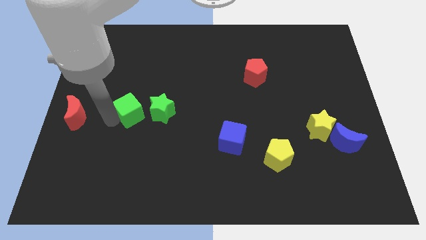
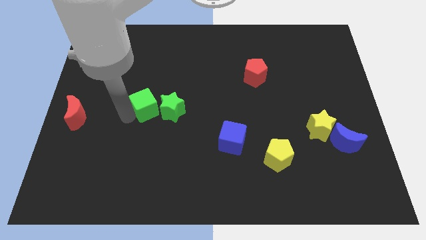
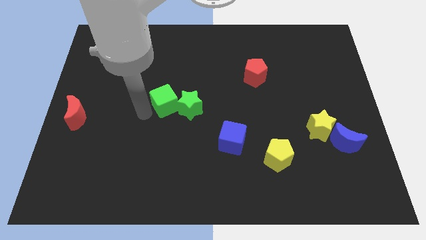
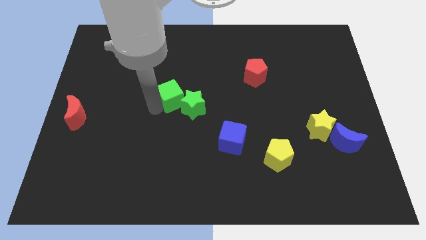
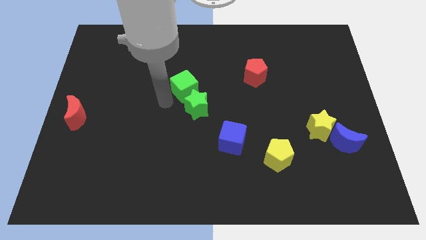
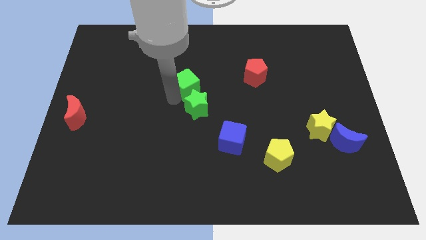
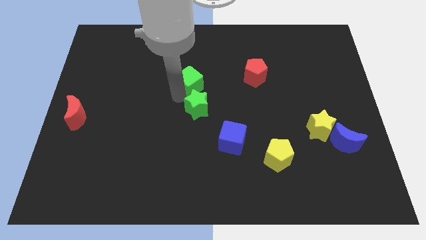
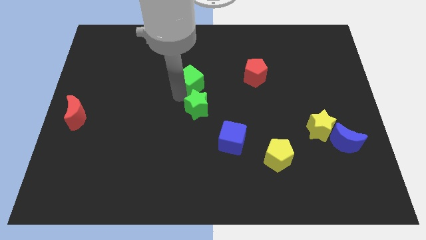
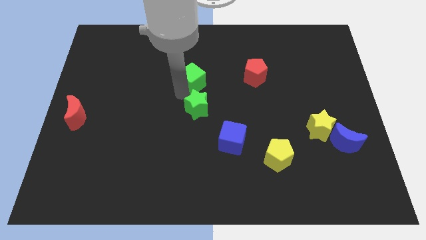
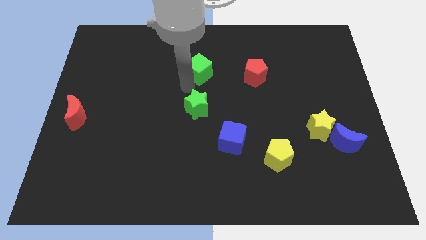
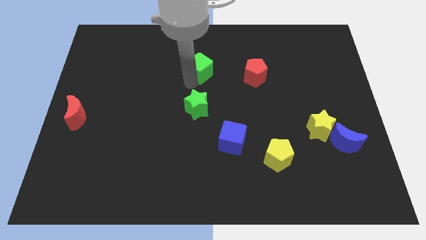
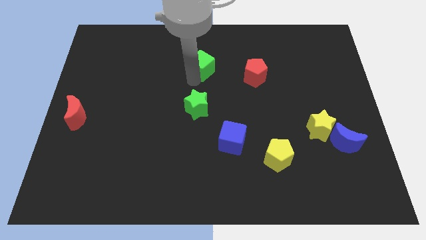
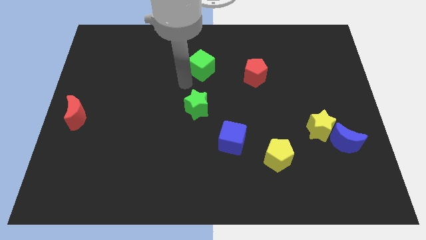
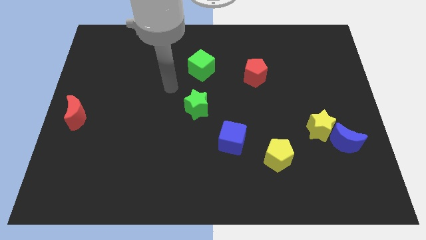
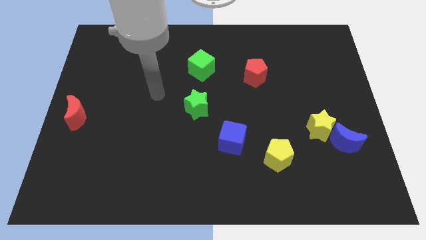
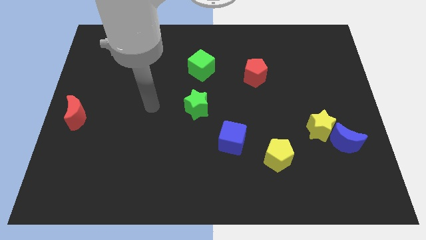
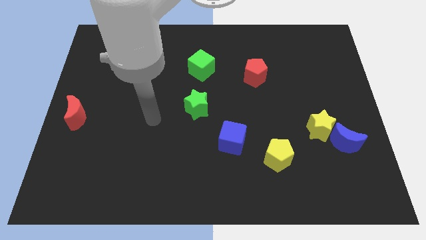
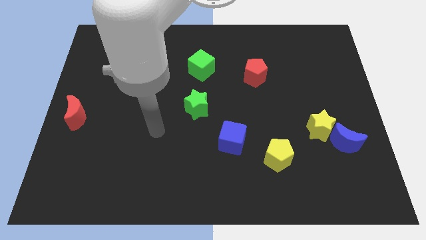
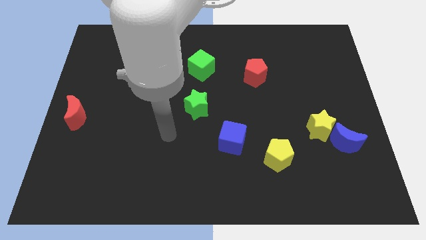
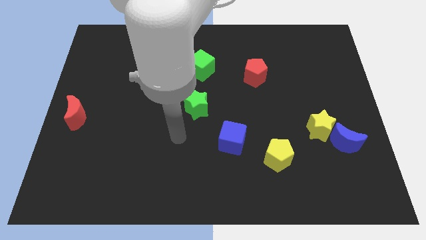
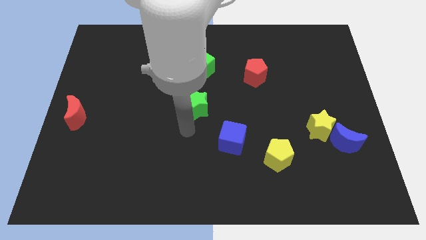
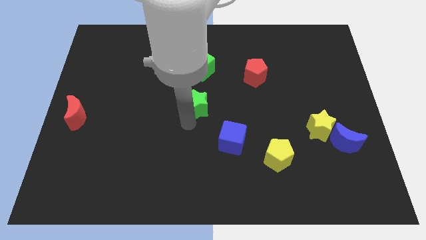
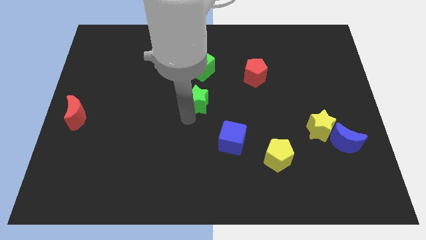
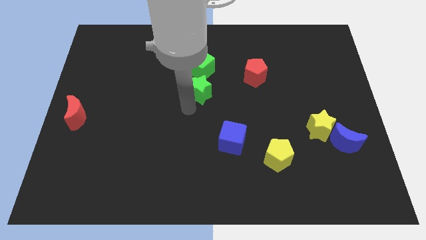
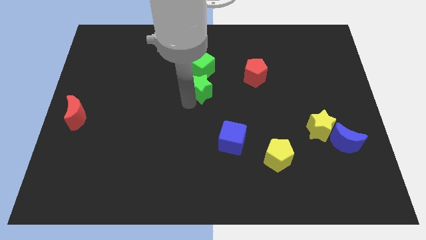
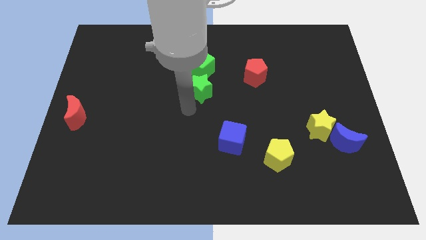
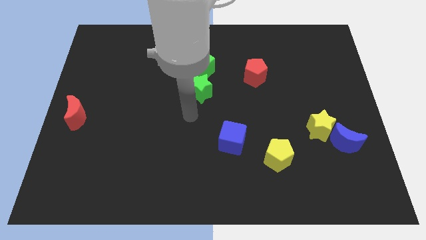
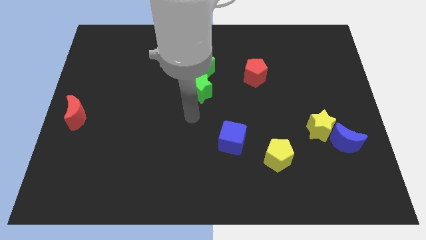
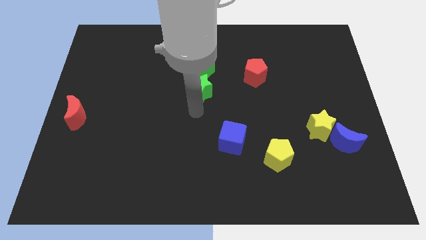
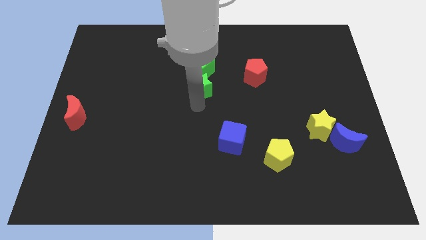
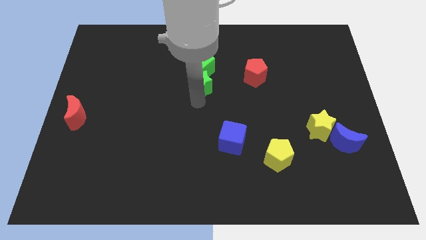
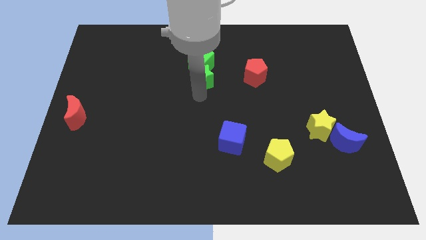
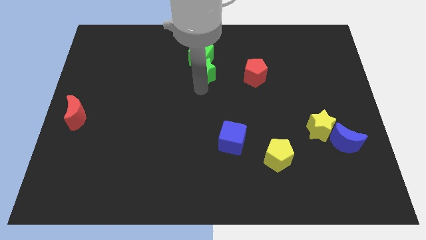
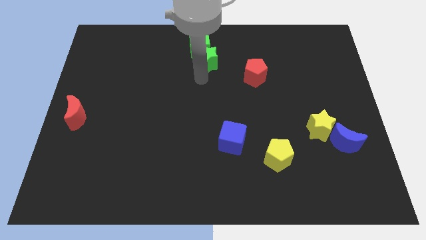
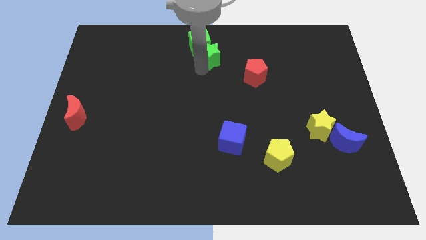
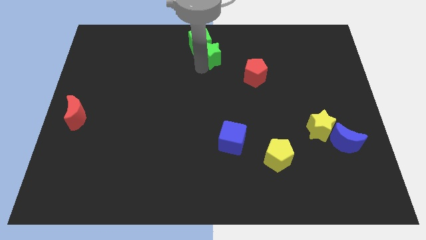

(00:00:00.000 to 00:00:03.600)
push the green star and green cube to the top center of the board

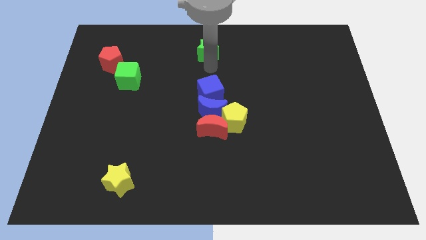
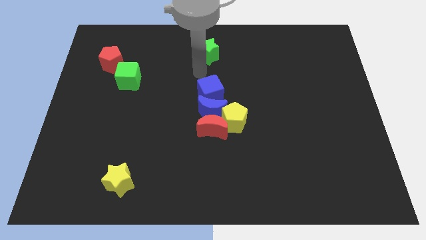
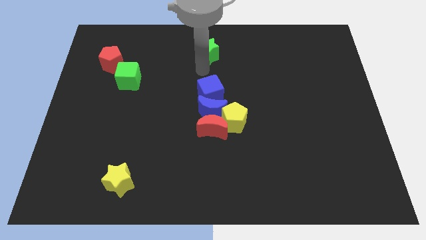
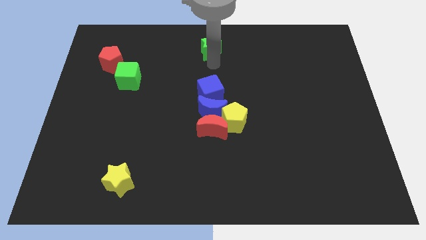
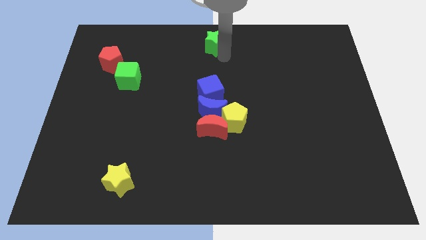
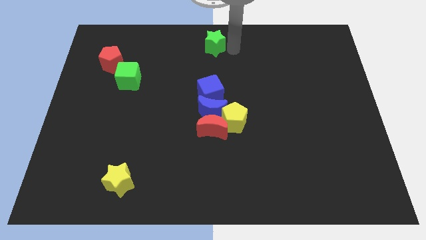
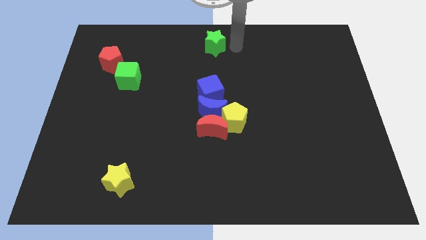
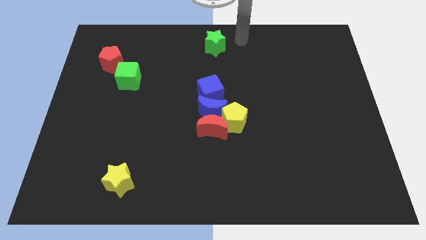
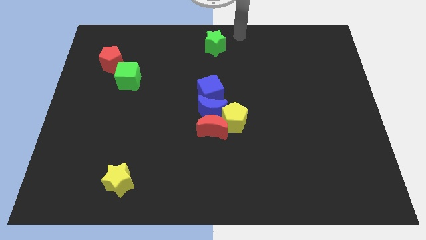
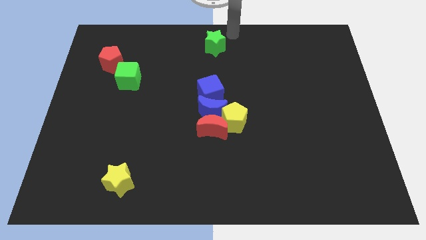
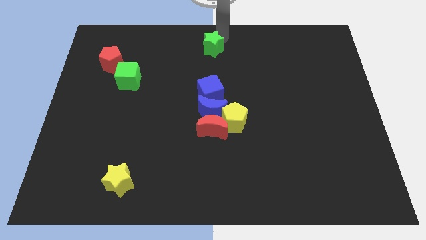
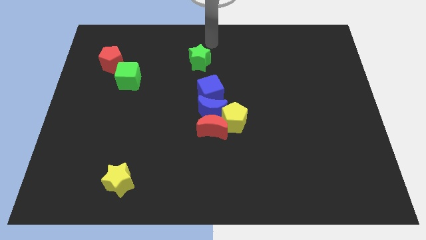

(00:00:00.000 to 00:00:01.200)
push the green star to the top center of the board

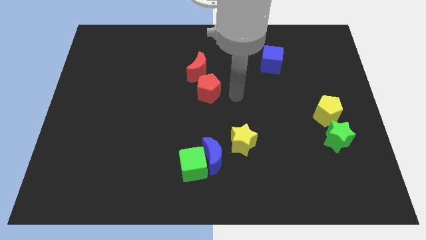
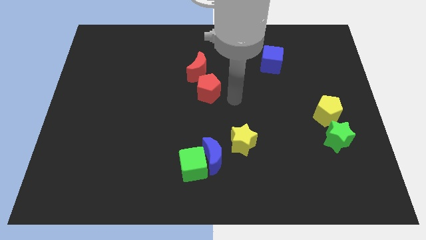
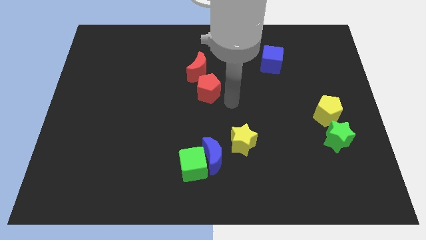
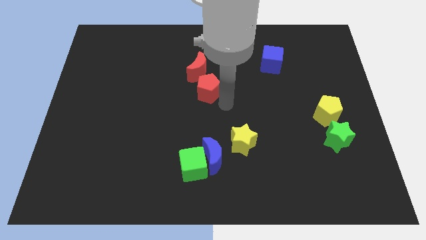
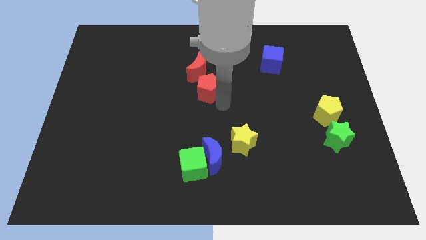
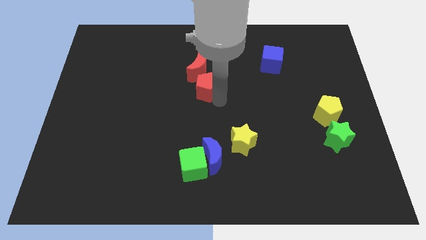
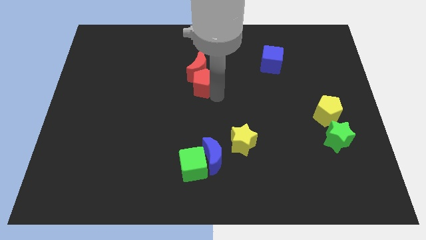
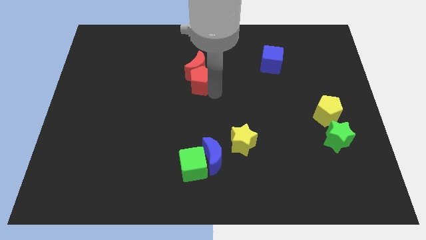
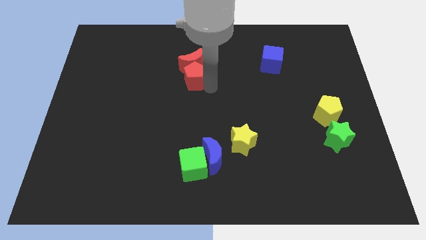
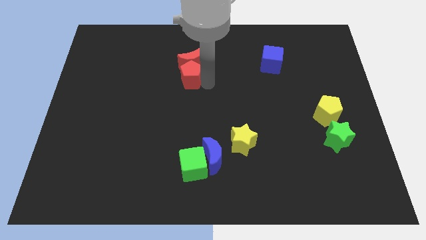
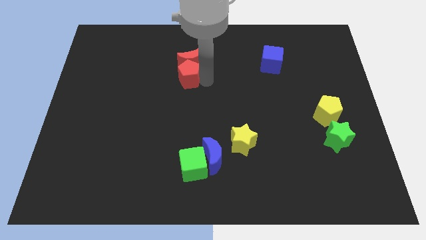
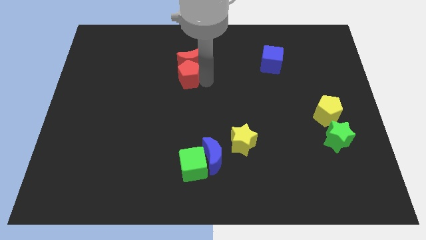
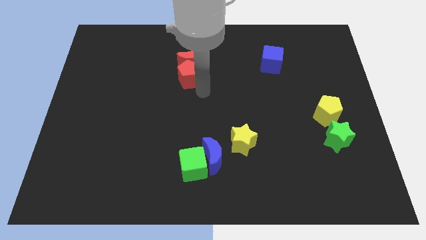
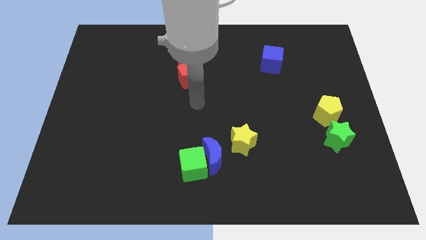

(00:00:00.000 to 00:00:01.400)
push the red pentagon into the red moon

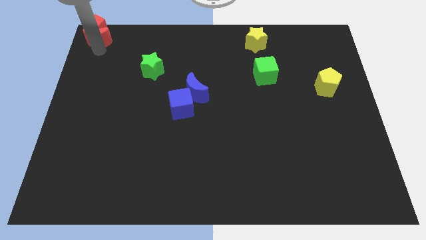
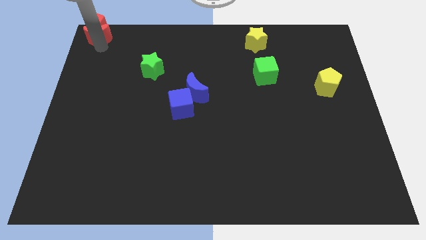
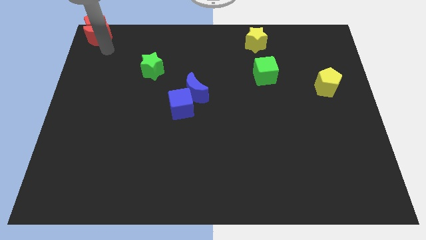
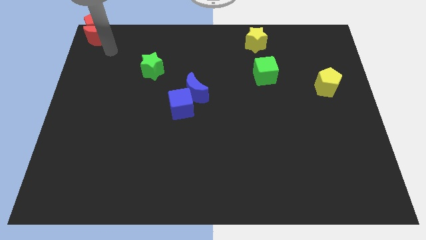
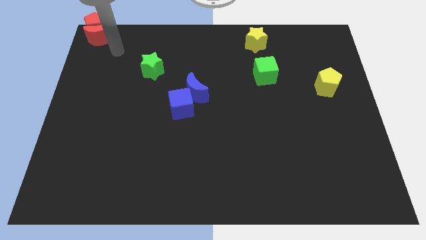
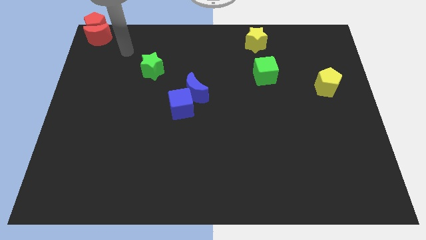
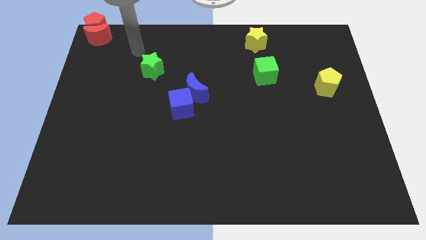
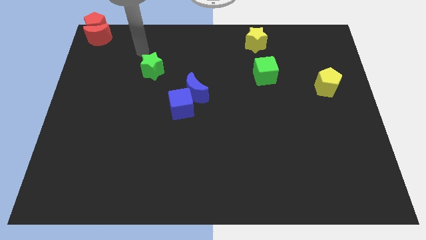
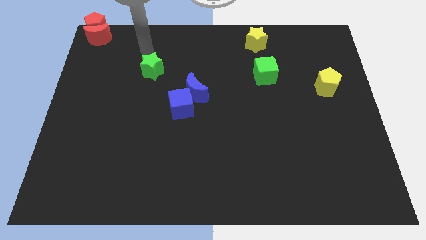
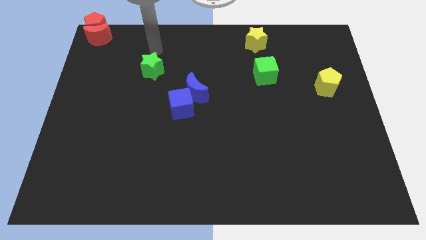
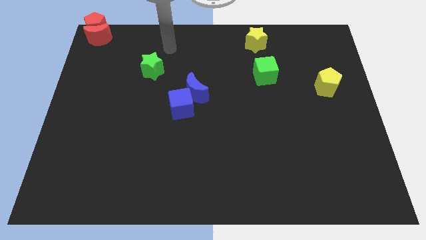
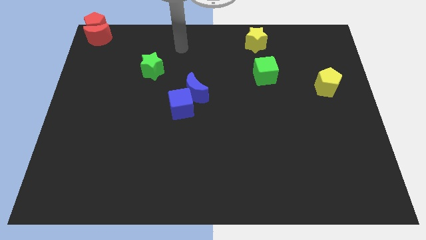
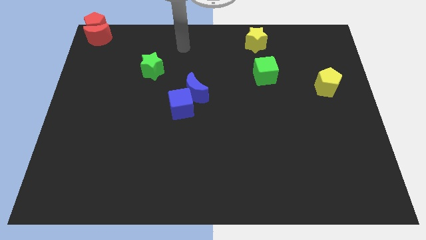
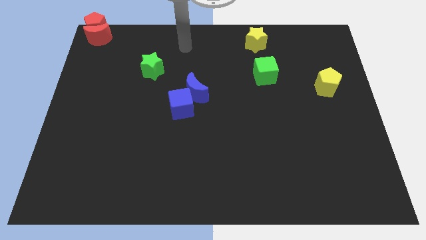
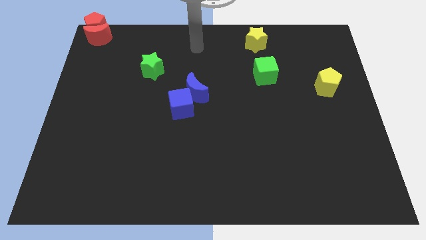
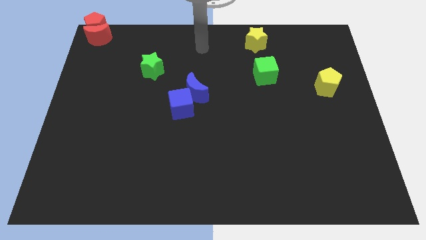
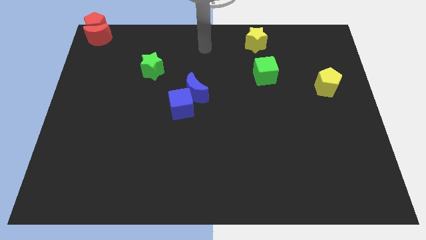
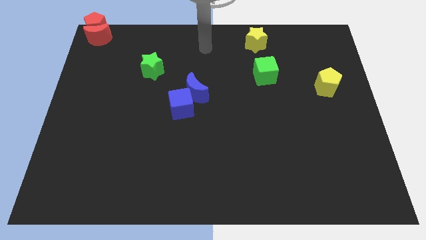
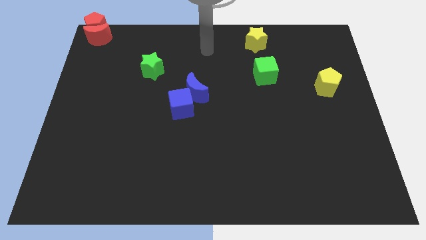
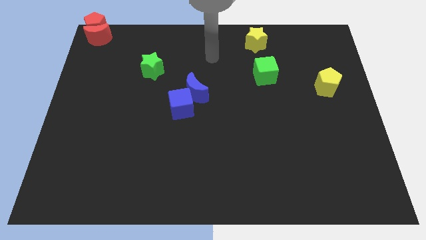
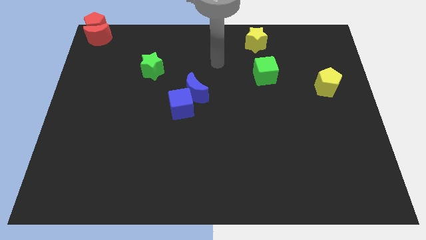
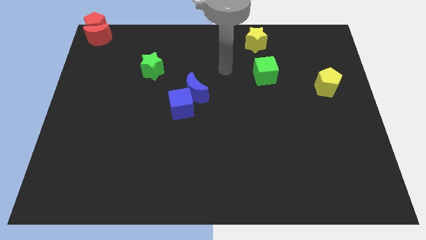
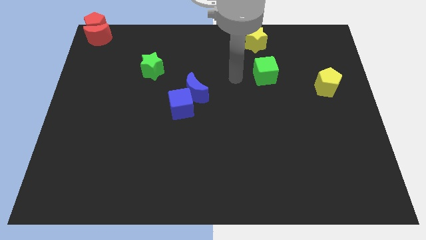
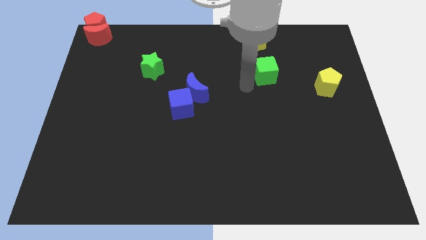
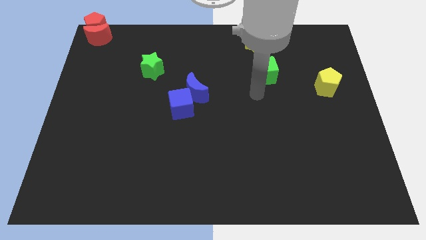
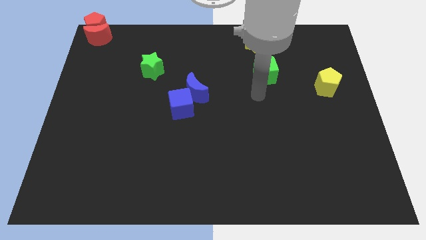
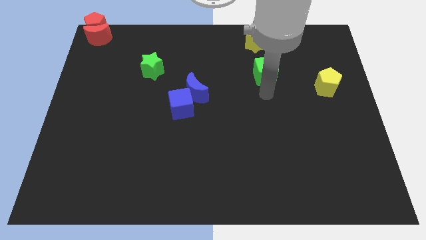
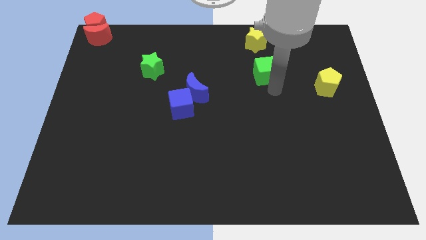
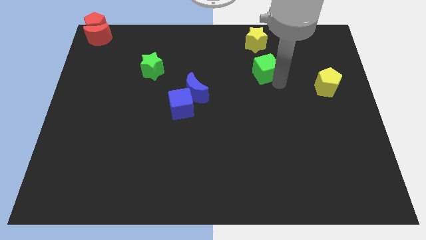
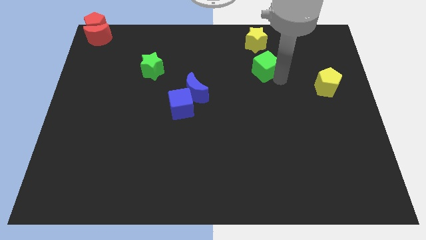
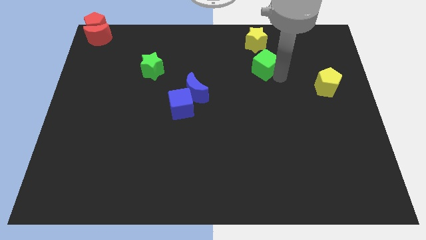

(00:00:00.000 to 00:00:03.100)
move your arm towards the green cube
